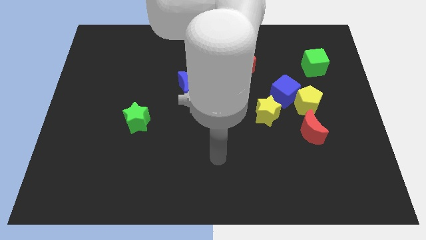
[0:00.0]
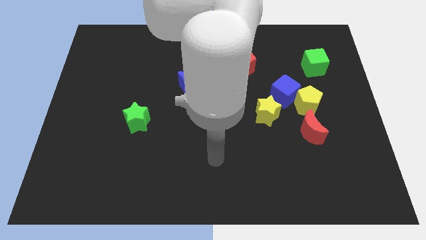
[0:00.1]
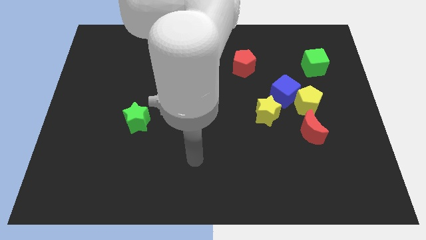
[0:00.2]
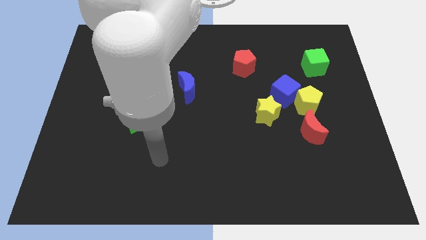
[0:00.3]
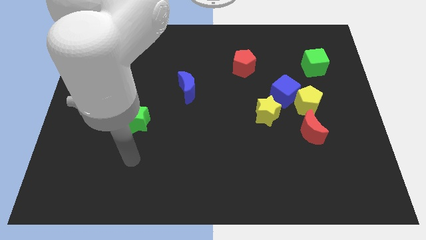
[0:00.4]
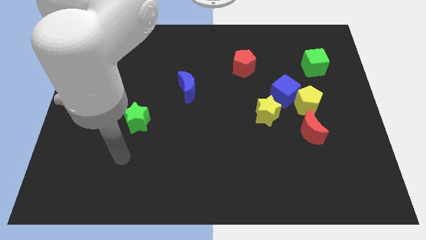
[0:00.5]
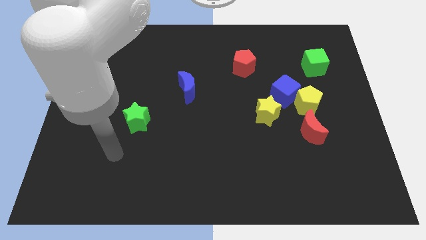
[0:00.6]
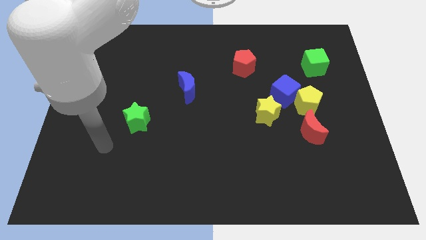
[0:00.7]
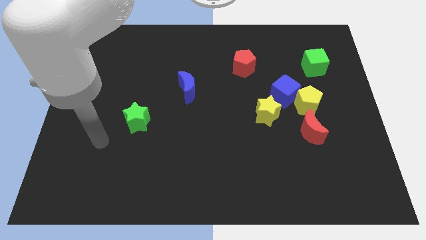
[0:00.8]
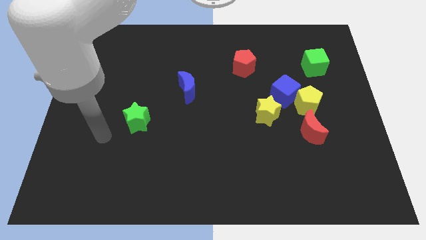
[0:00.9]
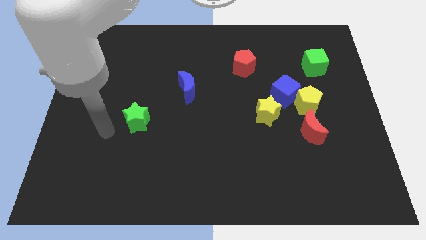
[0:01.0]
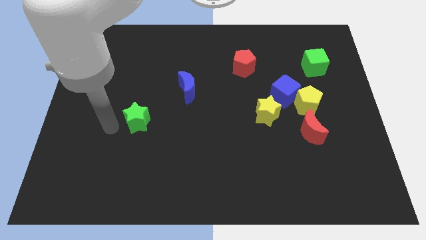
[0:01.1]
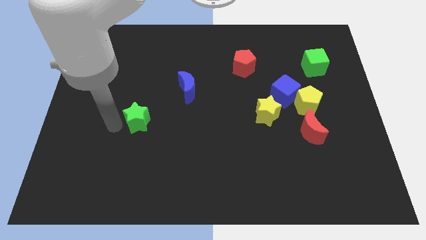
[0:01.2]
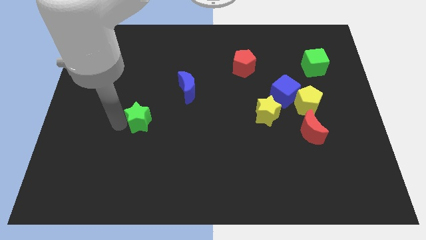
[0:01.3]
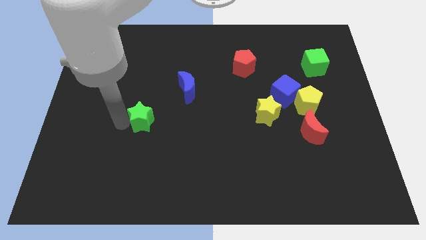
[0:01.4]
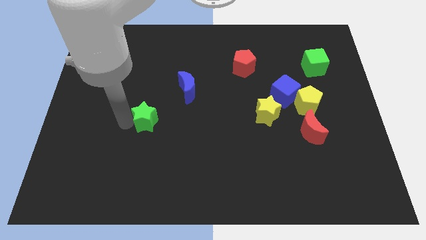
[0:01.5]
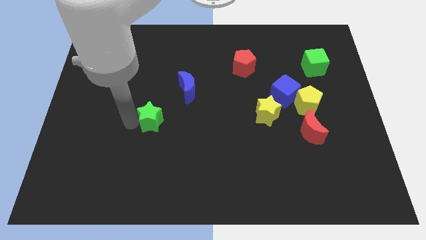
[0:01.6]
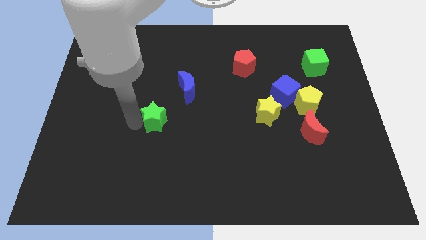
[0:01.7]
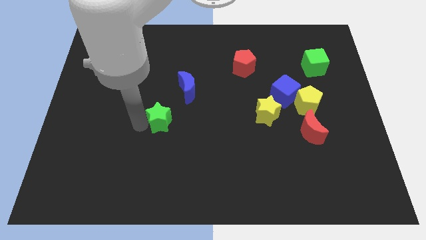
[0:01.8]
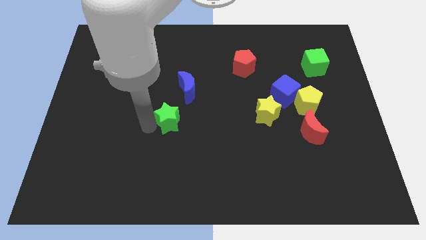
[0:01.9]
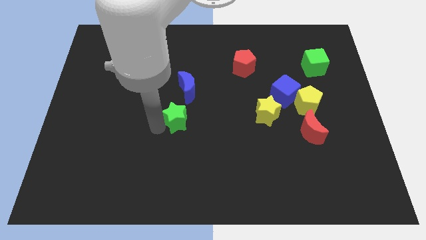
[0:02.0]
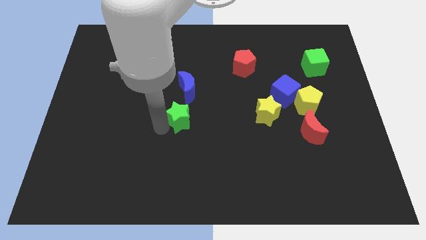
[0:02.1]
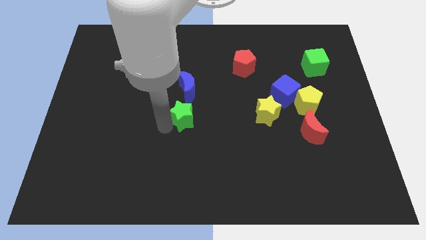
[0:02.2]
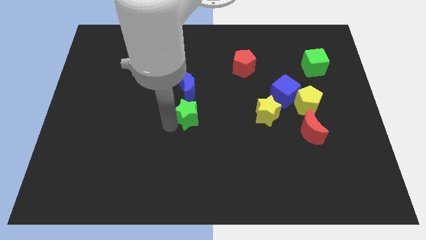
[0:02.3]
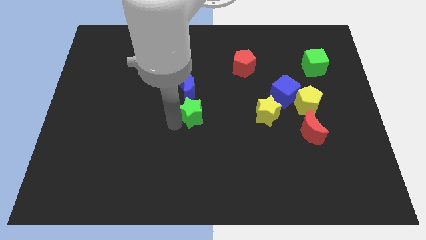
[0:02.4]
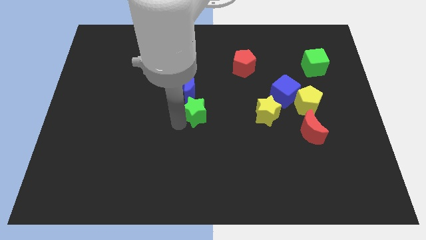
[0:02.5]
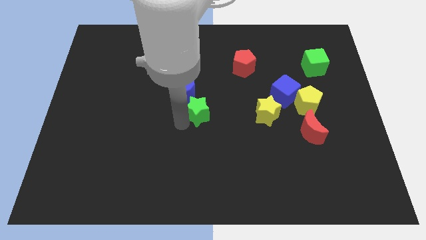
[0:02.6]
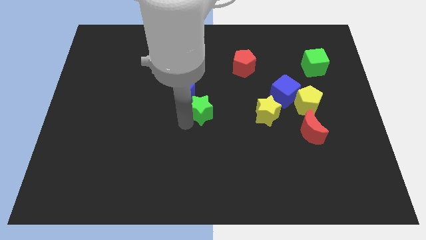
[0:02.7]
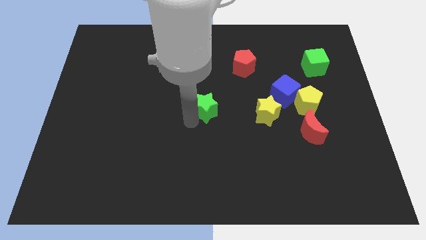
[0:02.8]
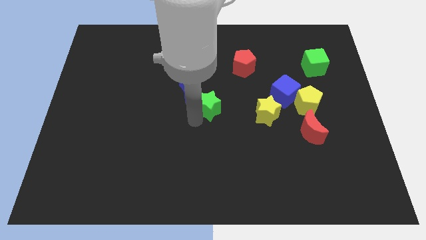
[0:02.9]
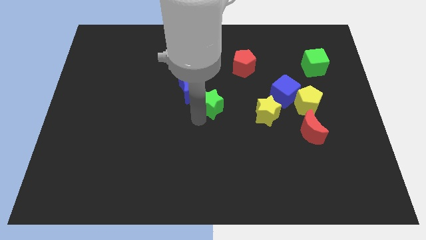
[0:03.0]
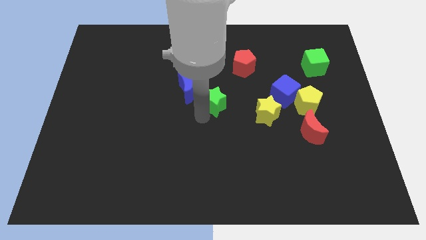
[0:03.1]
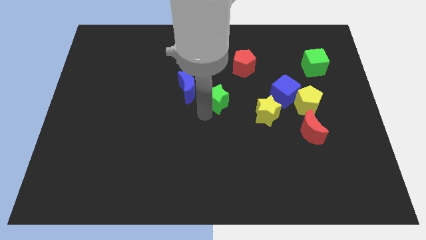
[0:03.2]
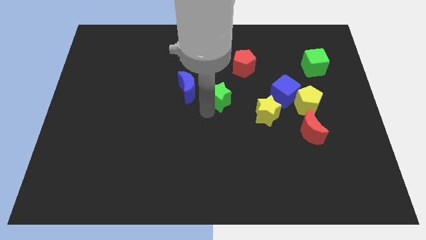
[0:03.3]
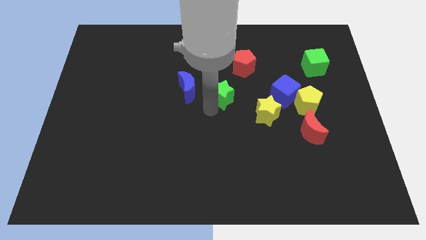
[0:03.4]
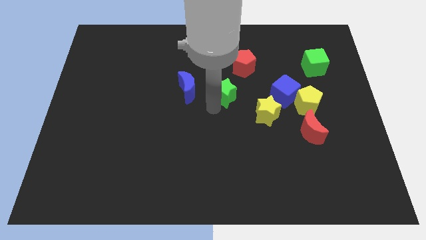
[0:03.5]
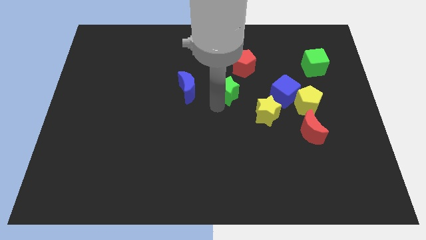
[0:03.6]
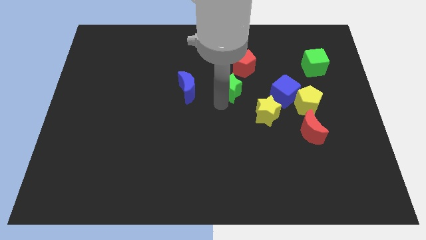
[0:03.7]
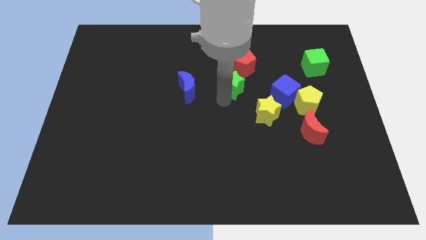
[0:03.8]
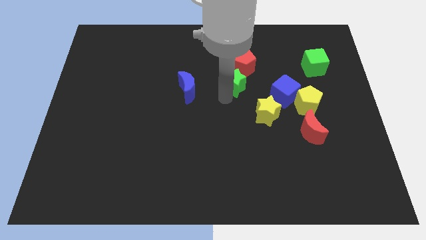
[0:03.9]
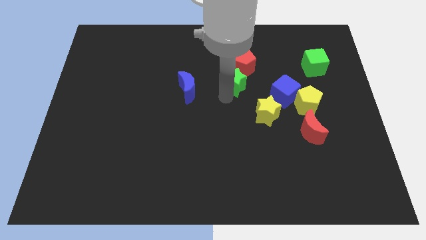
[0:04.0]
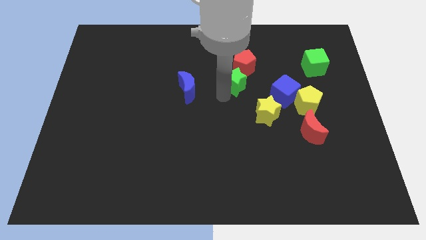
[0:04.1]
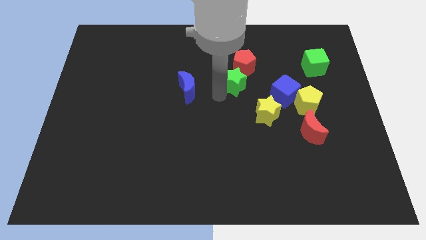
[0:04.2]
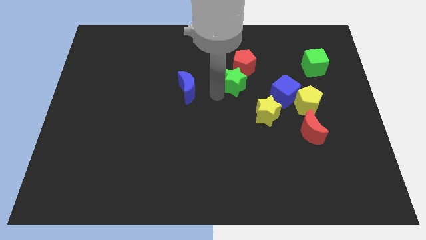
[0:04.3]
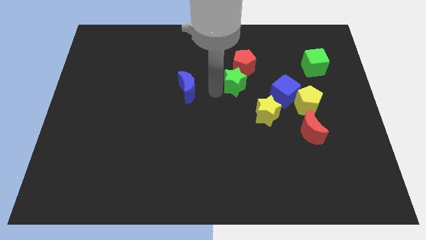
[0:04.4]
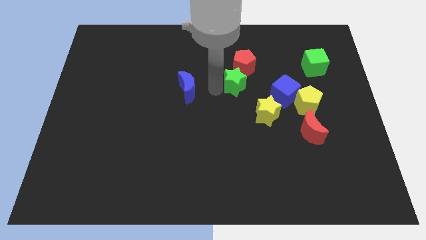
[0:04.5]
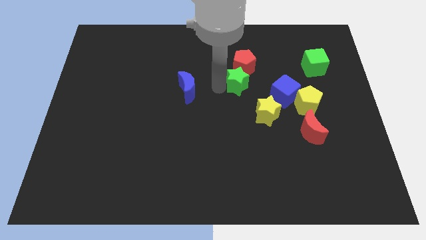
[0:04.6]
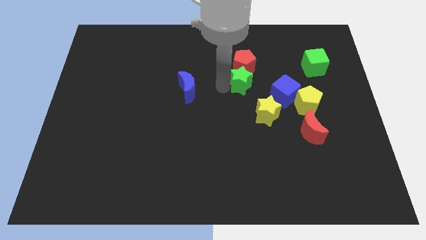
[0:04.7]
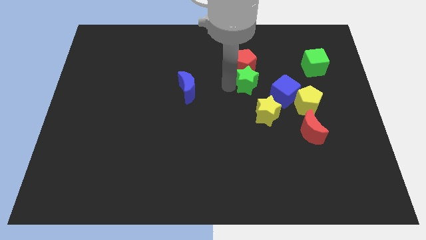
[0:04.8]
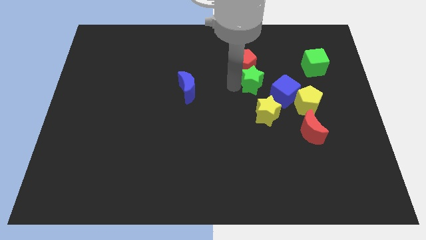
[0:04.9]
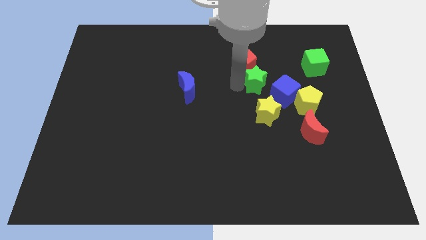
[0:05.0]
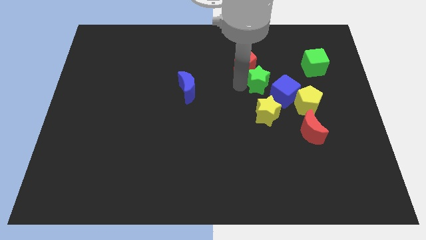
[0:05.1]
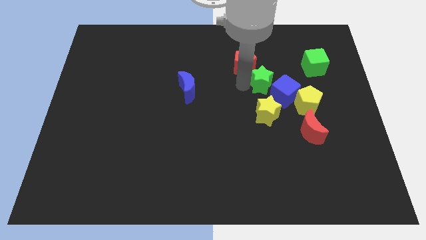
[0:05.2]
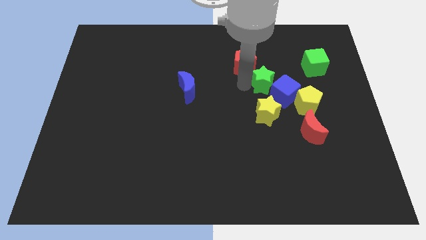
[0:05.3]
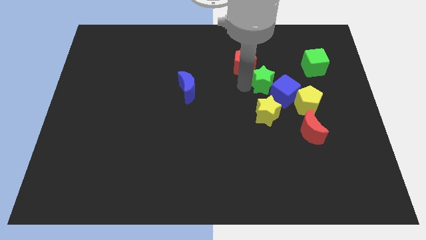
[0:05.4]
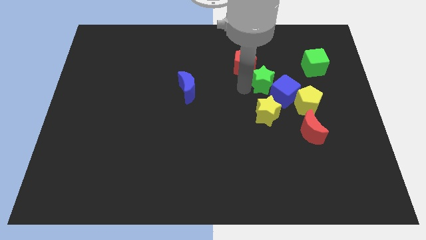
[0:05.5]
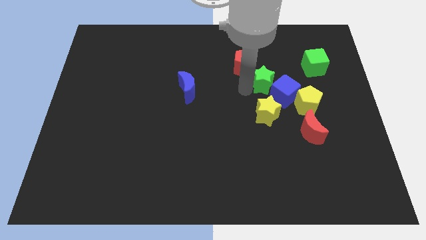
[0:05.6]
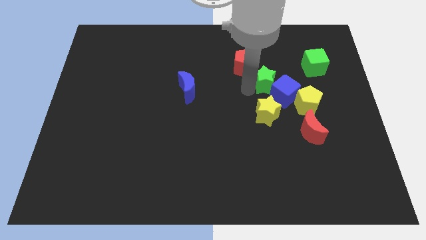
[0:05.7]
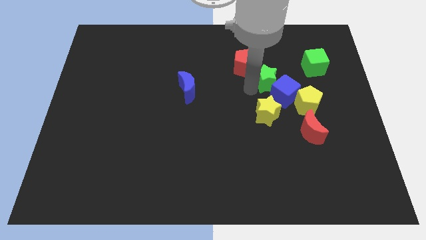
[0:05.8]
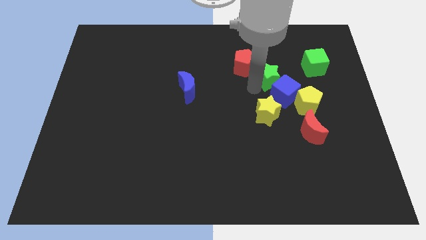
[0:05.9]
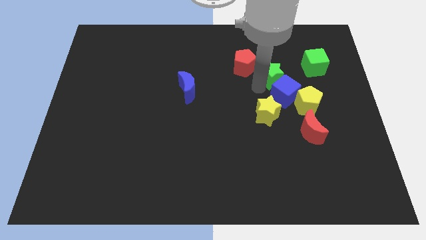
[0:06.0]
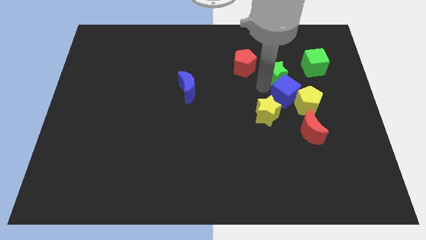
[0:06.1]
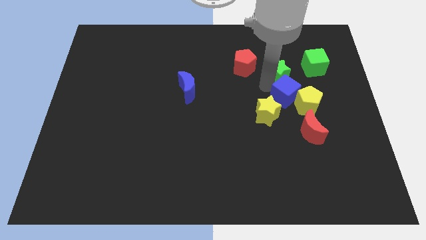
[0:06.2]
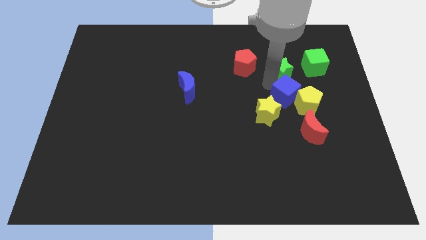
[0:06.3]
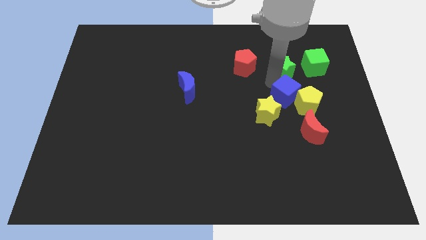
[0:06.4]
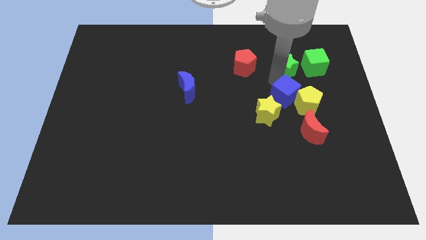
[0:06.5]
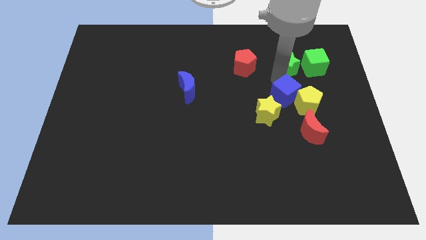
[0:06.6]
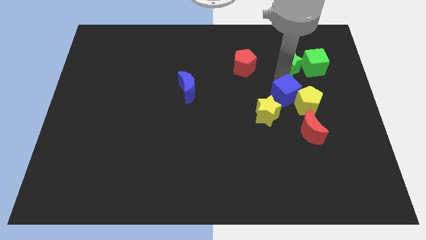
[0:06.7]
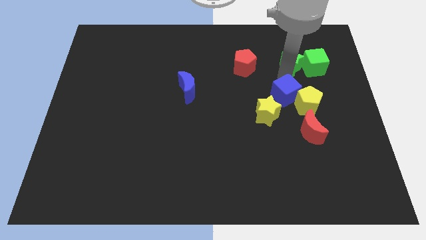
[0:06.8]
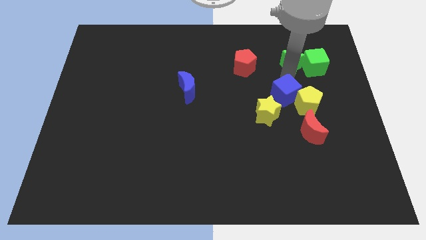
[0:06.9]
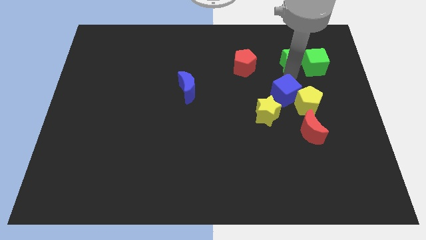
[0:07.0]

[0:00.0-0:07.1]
slide the green star towards the green cube

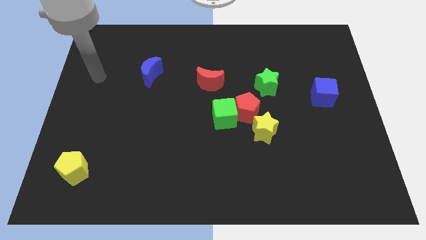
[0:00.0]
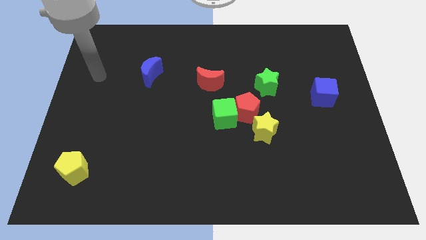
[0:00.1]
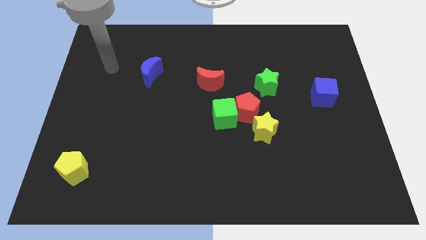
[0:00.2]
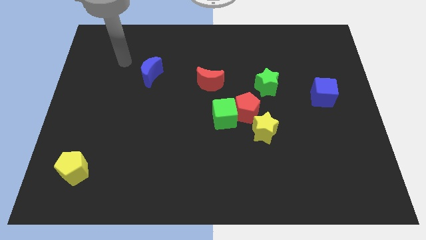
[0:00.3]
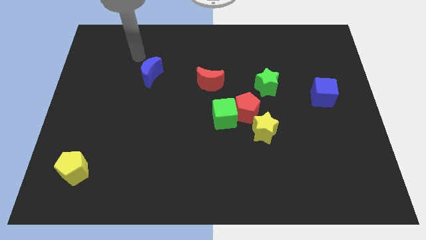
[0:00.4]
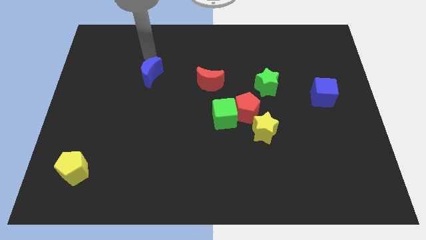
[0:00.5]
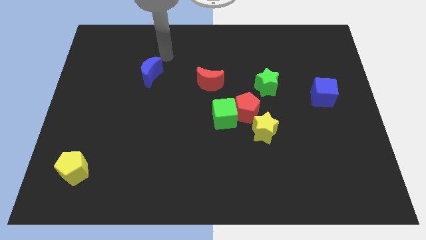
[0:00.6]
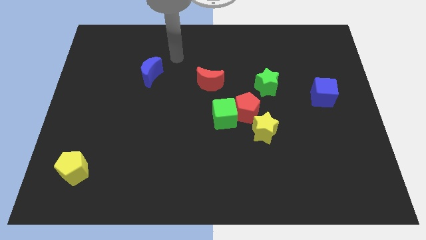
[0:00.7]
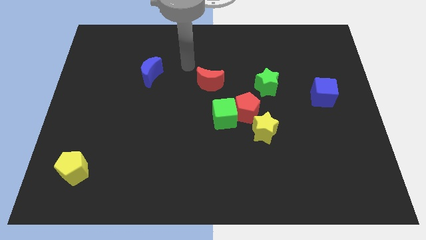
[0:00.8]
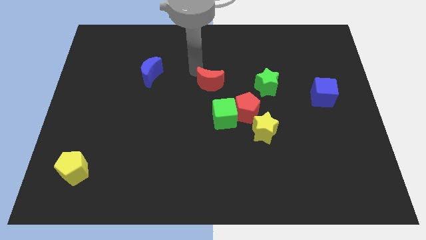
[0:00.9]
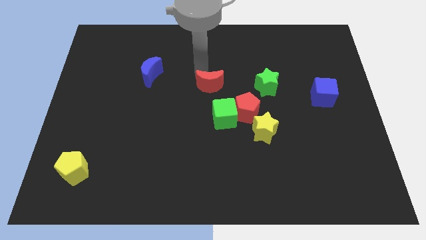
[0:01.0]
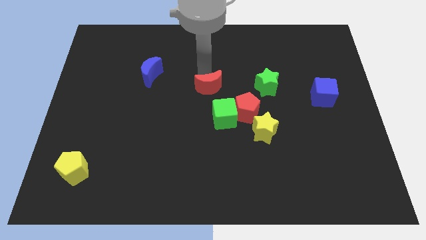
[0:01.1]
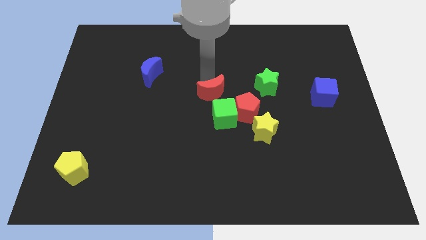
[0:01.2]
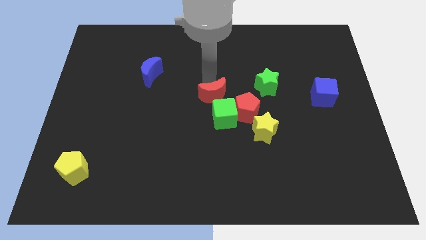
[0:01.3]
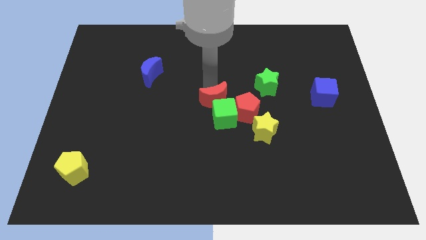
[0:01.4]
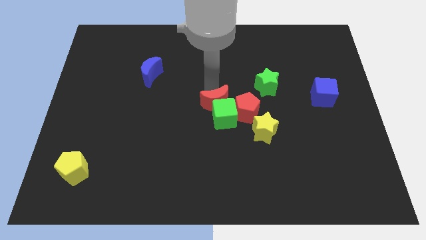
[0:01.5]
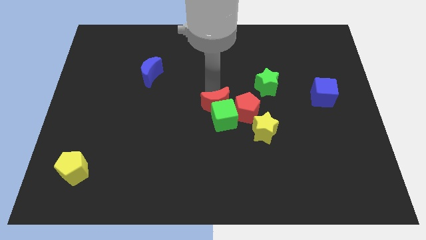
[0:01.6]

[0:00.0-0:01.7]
slide the red moon to the green cube
